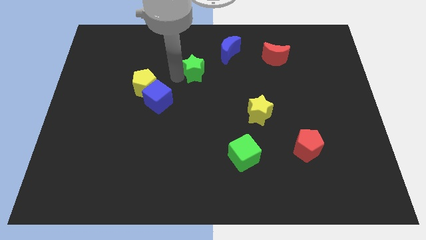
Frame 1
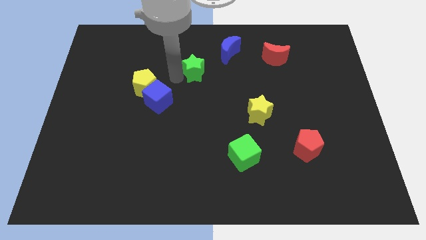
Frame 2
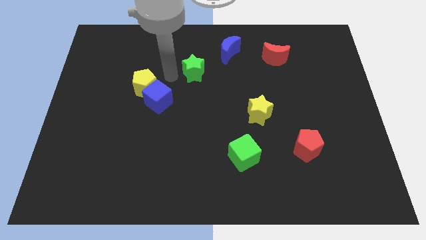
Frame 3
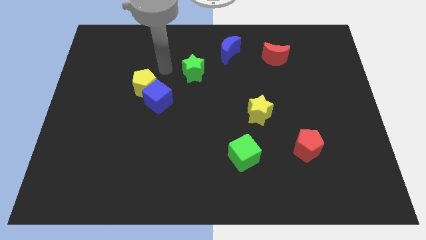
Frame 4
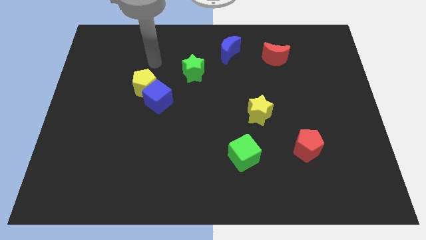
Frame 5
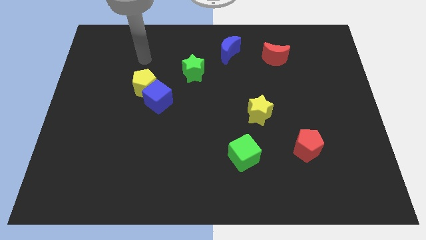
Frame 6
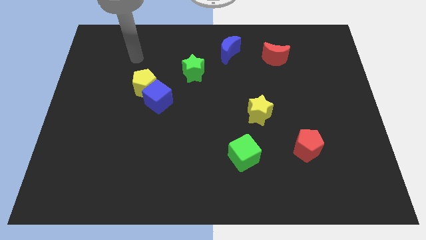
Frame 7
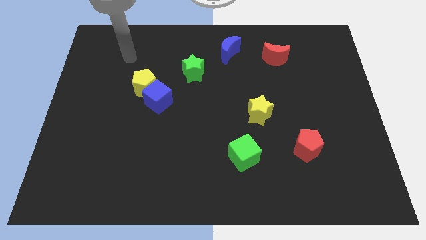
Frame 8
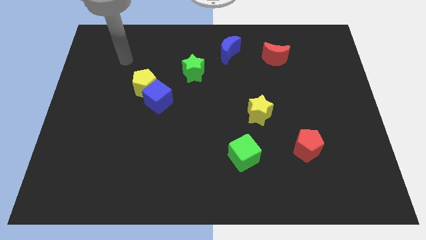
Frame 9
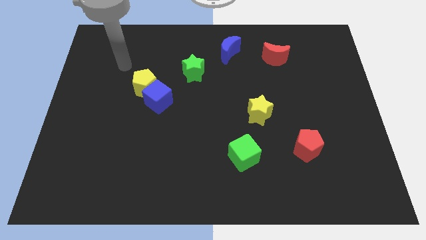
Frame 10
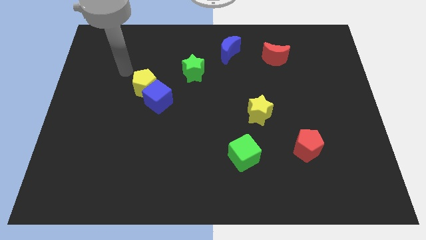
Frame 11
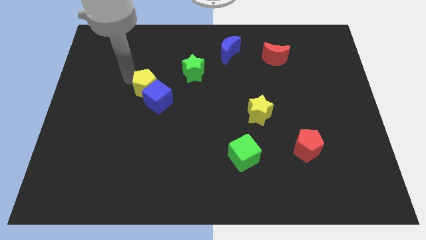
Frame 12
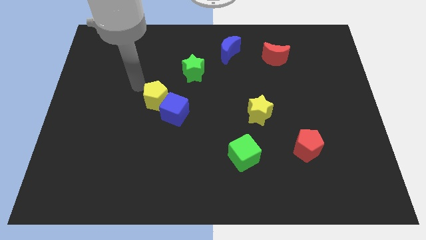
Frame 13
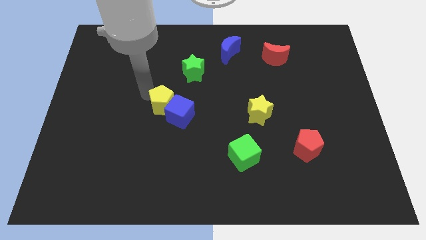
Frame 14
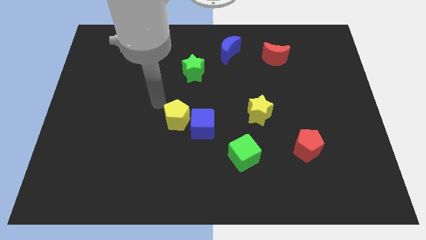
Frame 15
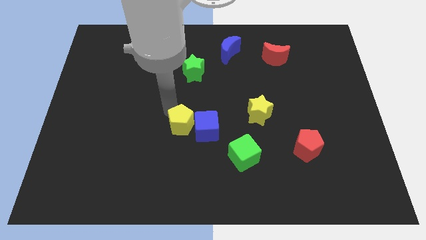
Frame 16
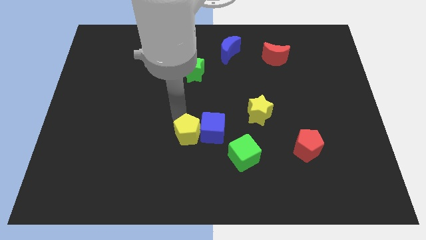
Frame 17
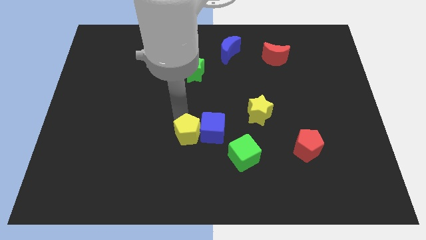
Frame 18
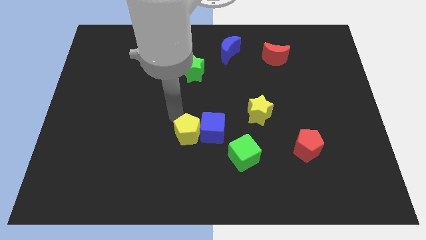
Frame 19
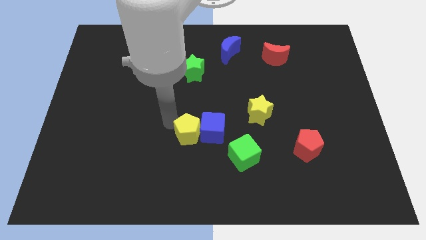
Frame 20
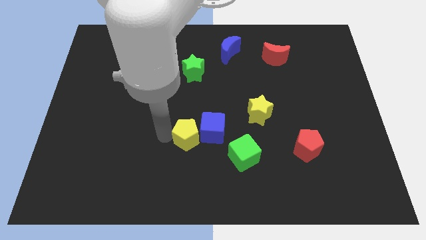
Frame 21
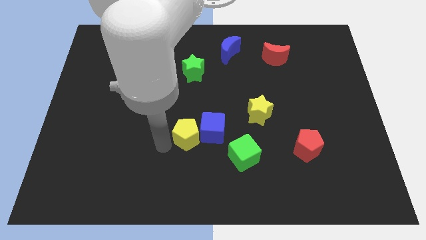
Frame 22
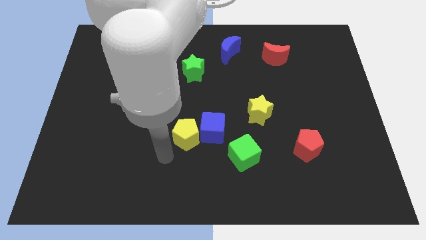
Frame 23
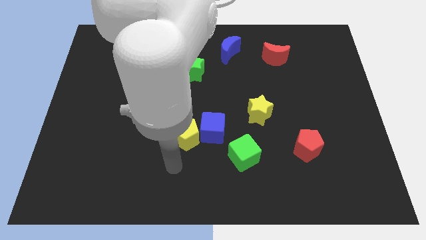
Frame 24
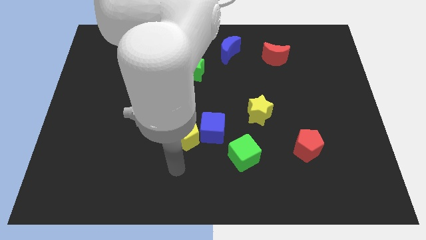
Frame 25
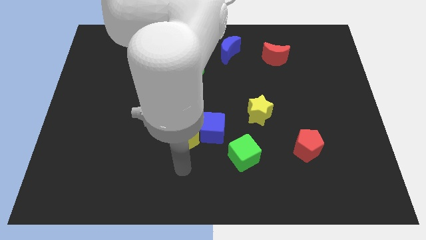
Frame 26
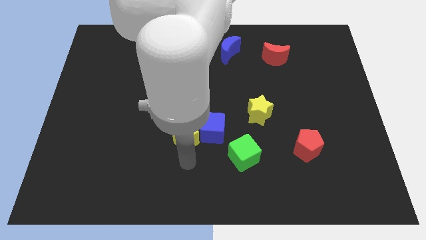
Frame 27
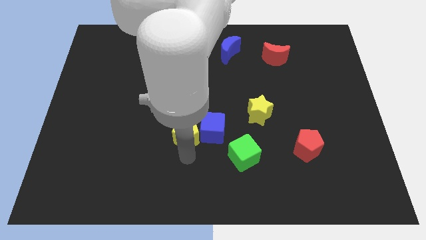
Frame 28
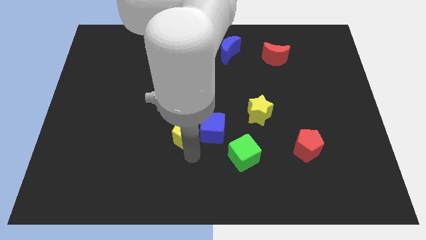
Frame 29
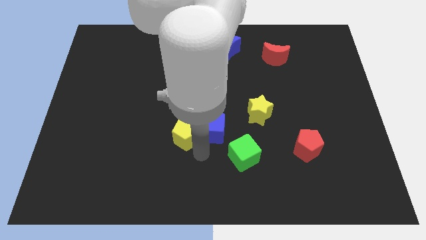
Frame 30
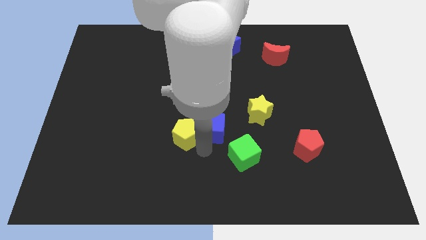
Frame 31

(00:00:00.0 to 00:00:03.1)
push yellow pentagon along with blue cube towards green cube

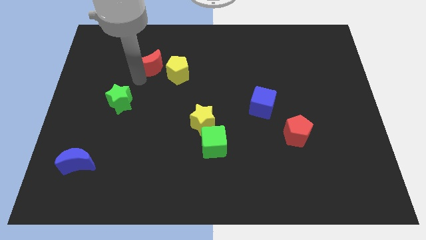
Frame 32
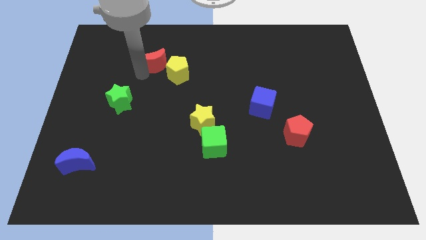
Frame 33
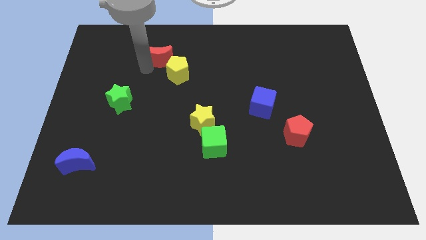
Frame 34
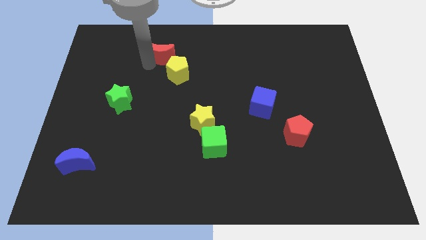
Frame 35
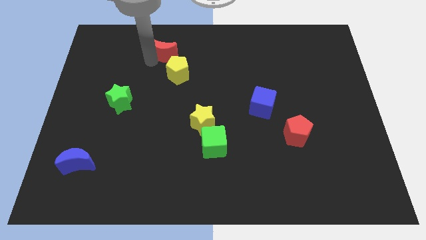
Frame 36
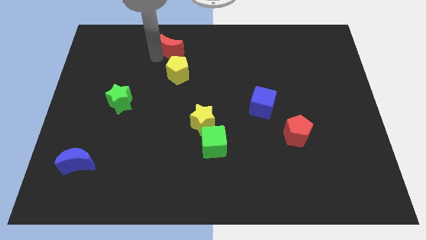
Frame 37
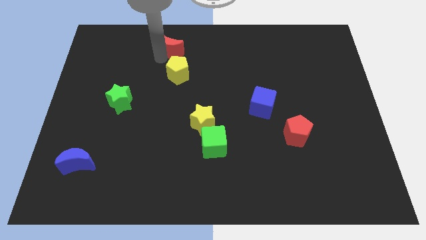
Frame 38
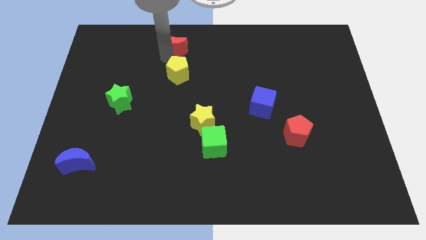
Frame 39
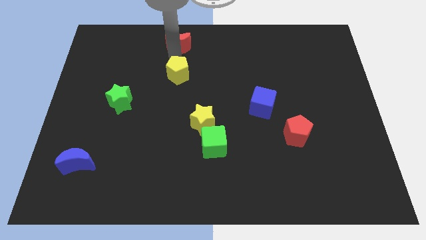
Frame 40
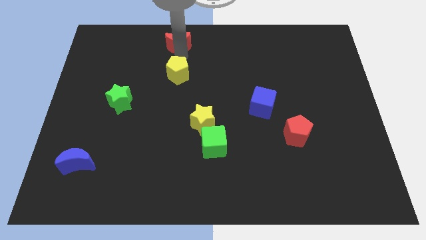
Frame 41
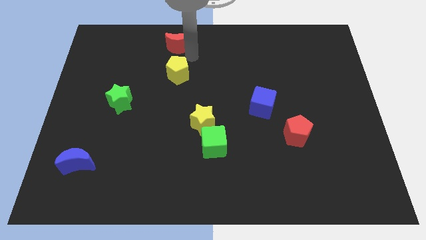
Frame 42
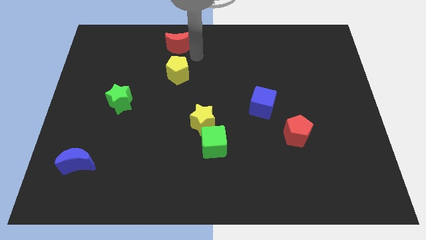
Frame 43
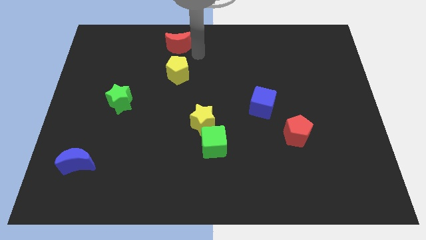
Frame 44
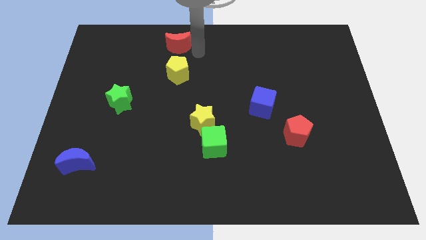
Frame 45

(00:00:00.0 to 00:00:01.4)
move the red moon towards the top center

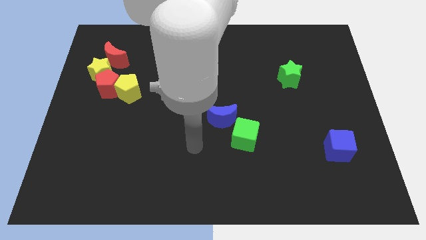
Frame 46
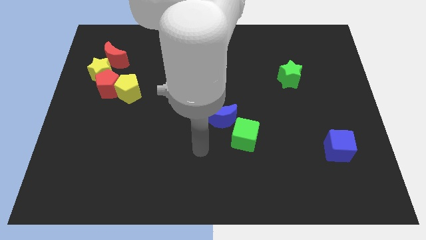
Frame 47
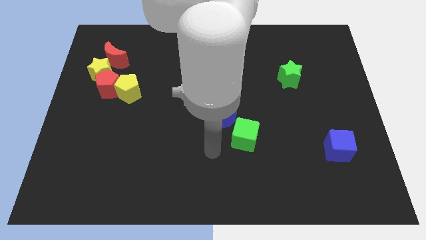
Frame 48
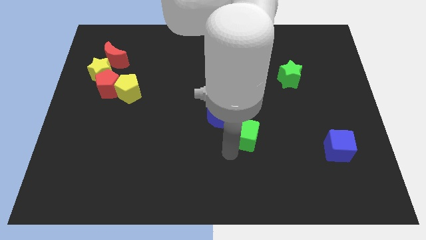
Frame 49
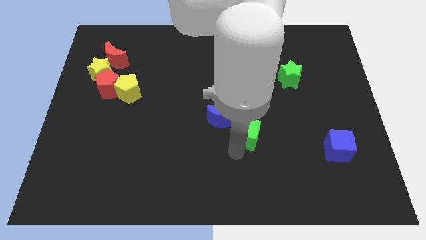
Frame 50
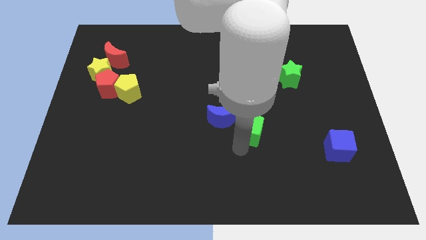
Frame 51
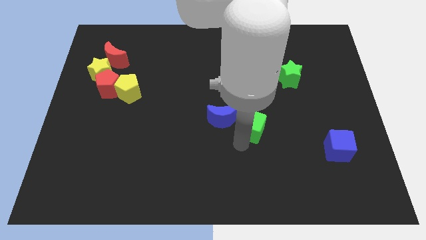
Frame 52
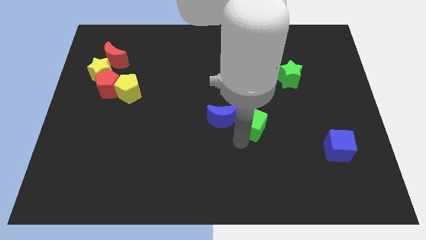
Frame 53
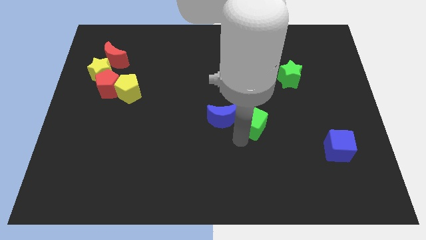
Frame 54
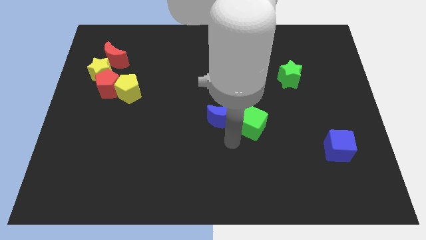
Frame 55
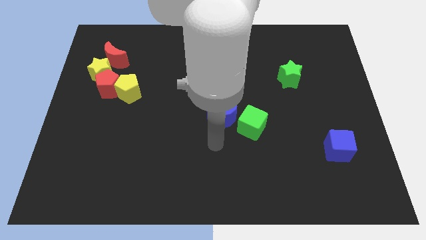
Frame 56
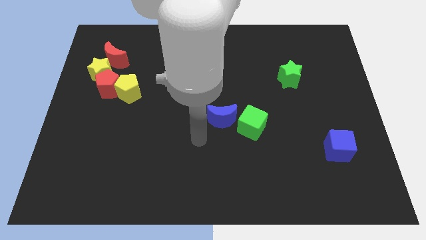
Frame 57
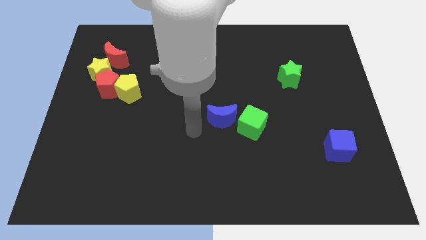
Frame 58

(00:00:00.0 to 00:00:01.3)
push the green cube slightly upward

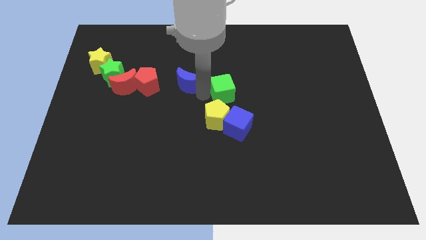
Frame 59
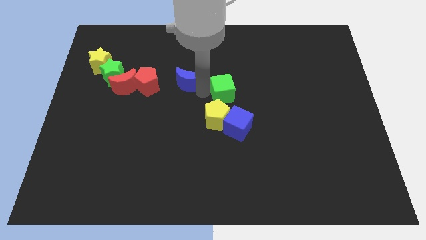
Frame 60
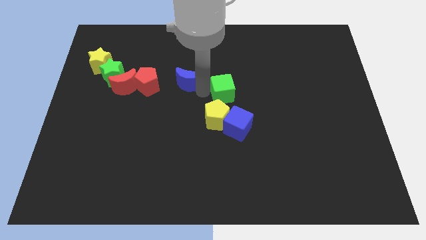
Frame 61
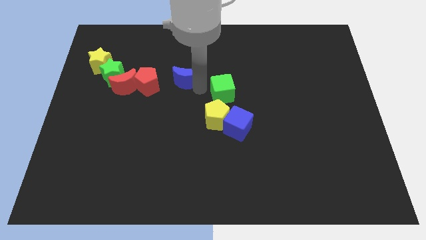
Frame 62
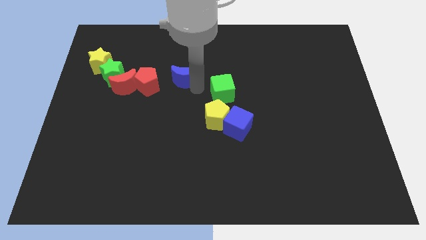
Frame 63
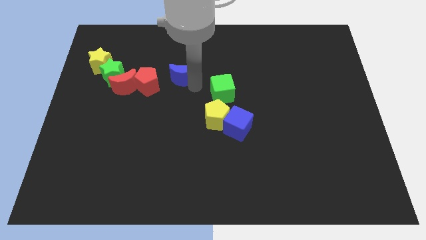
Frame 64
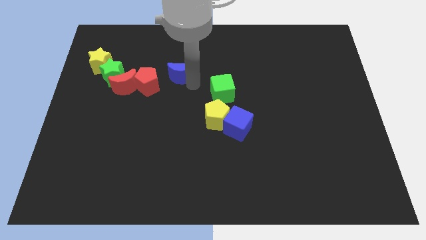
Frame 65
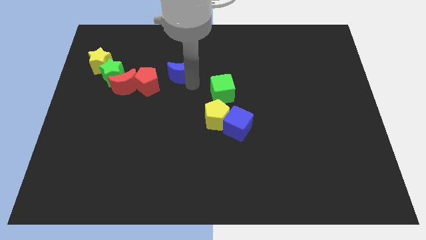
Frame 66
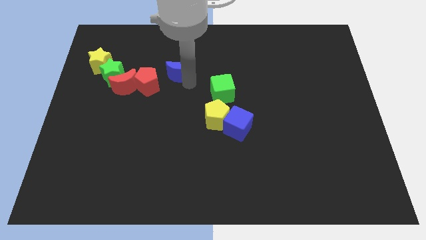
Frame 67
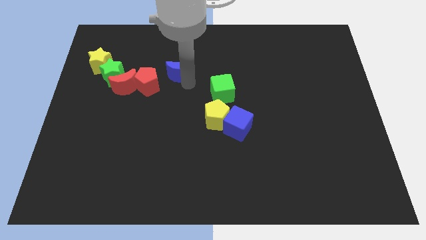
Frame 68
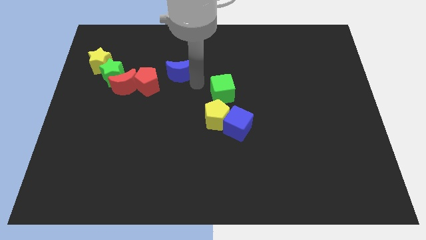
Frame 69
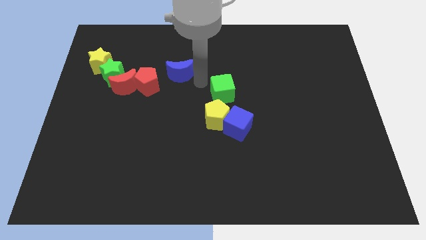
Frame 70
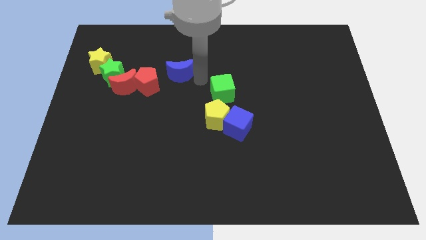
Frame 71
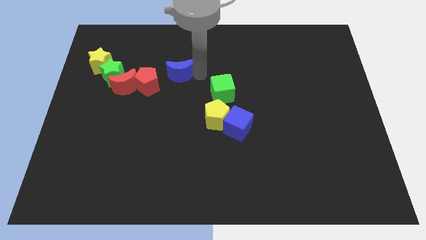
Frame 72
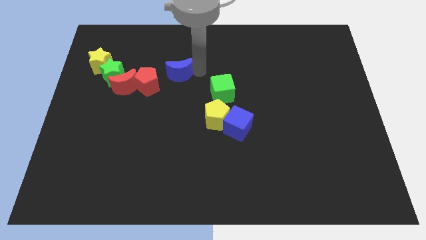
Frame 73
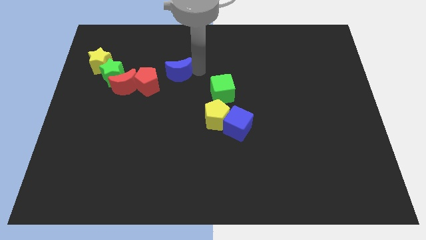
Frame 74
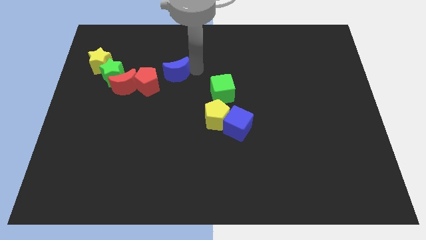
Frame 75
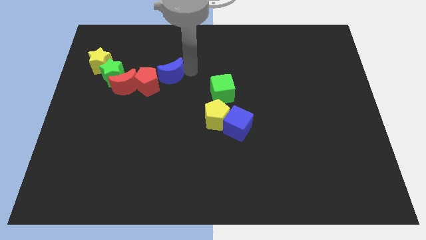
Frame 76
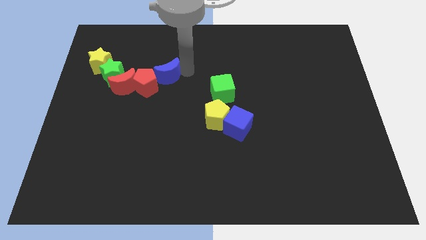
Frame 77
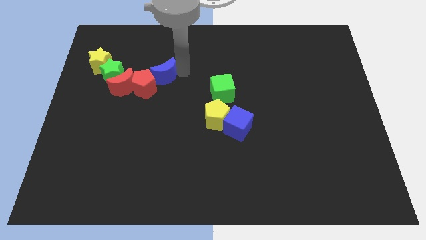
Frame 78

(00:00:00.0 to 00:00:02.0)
push blue moon into red pentagon

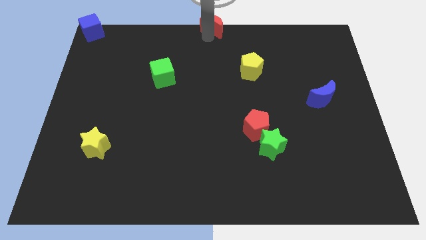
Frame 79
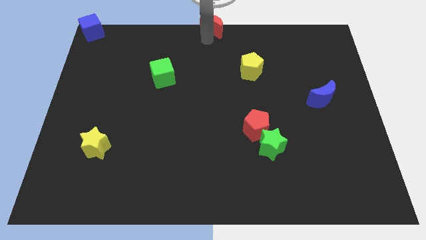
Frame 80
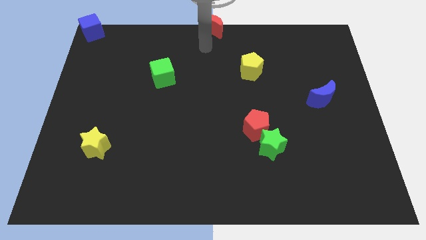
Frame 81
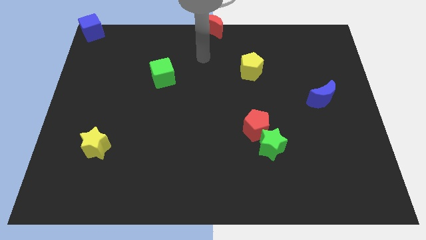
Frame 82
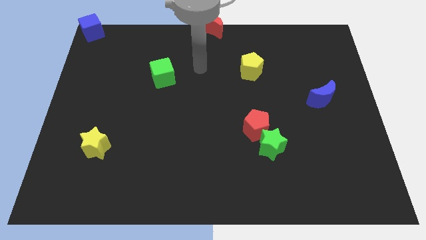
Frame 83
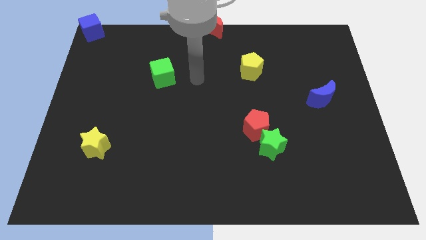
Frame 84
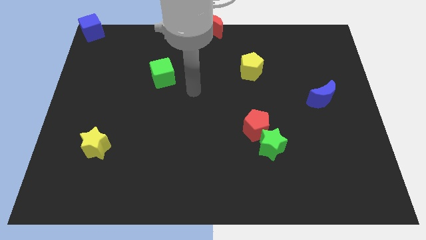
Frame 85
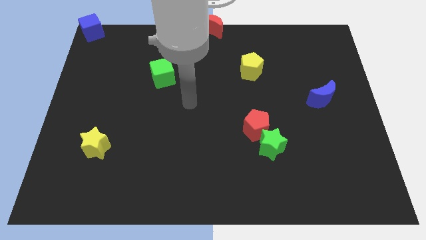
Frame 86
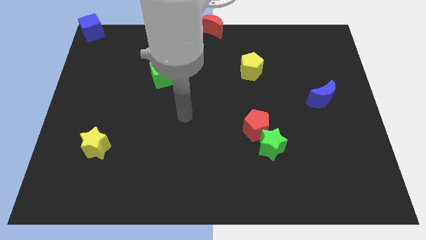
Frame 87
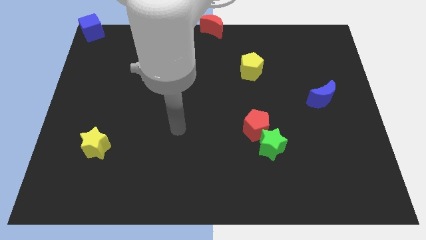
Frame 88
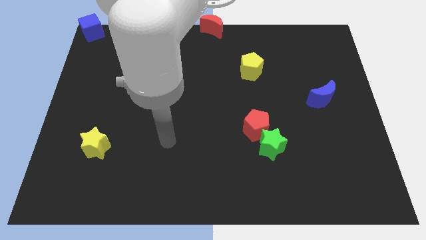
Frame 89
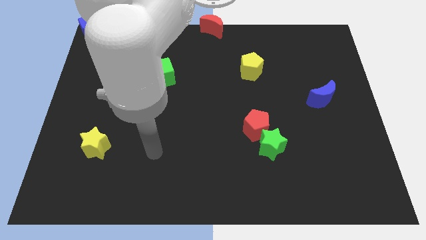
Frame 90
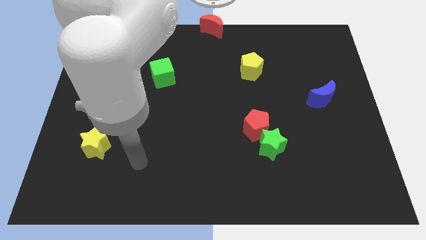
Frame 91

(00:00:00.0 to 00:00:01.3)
move the arm away from the red moon
